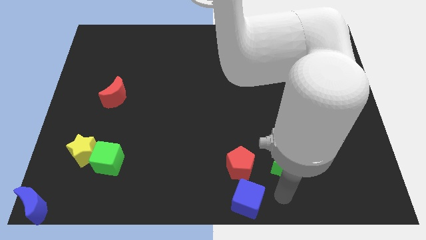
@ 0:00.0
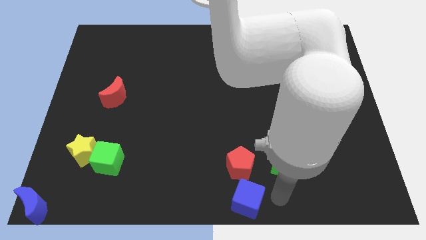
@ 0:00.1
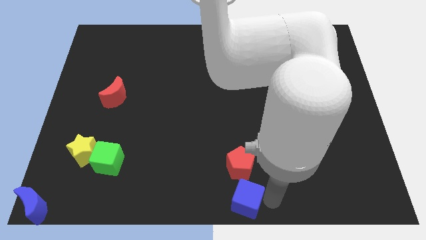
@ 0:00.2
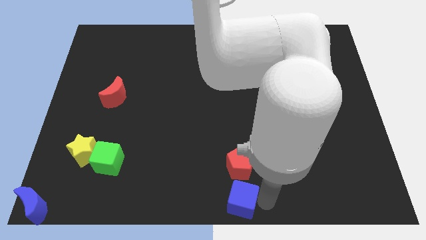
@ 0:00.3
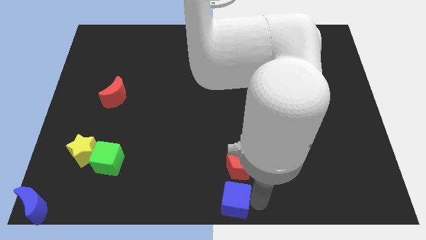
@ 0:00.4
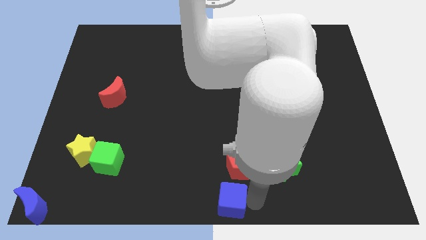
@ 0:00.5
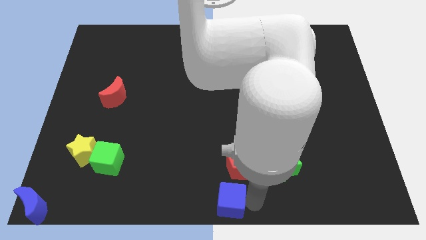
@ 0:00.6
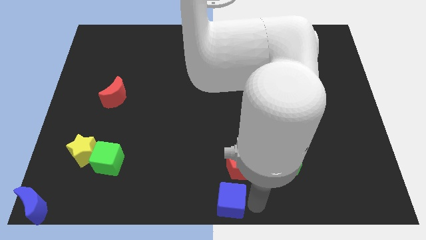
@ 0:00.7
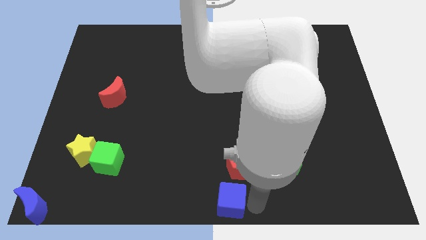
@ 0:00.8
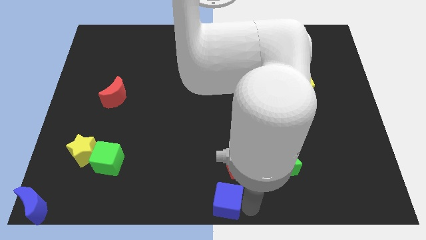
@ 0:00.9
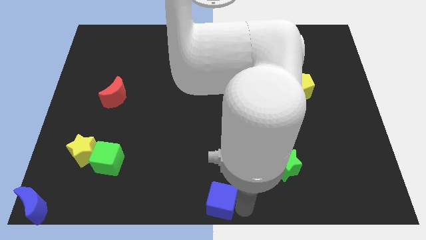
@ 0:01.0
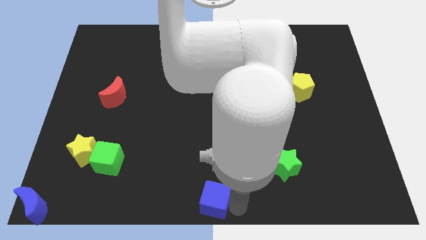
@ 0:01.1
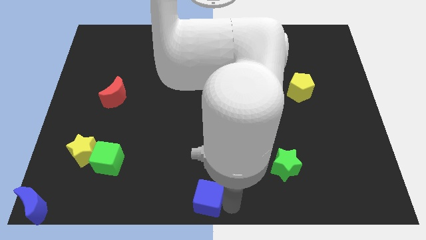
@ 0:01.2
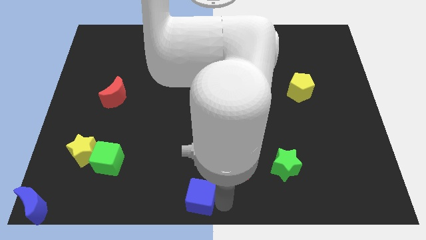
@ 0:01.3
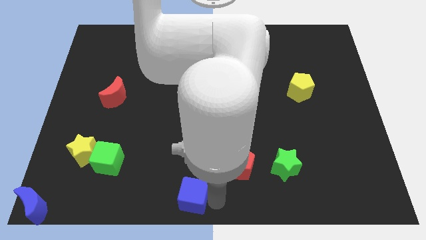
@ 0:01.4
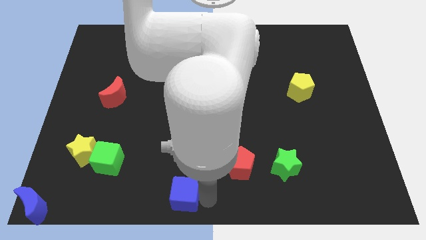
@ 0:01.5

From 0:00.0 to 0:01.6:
place the blue cube at the bottom center of the board

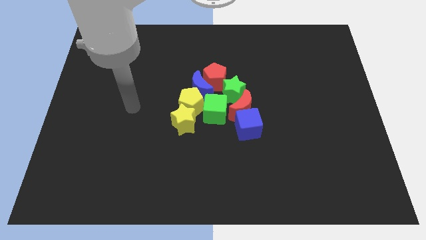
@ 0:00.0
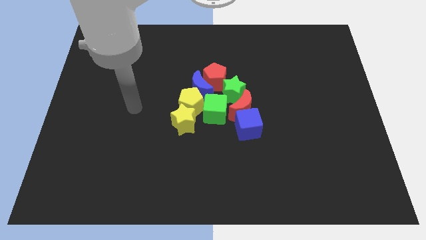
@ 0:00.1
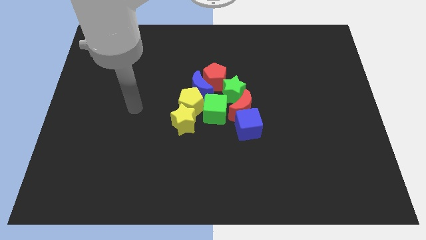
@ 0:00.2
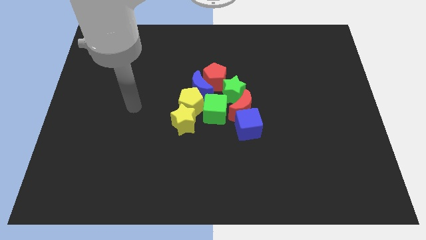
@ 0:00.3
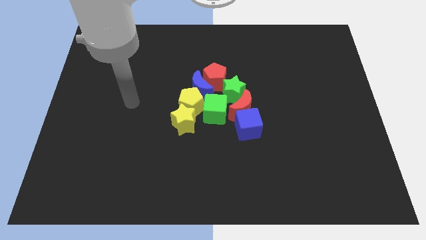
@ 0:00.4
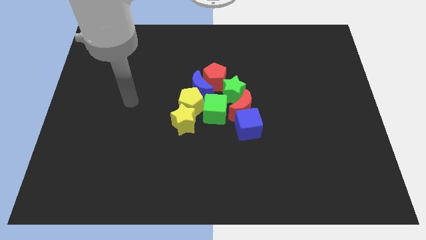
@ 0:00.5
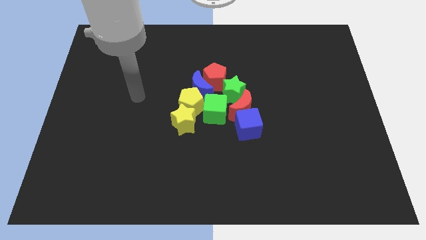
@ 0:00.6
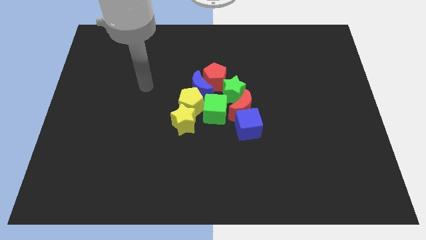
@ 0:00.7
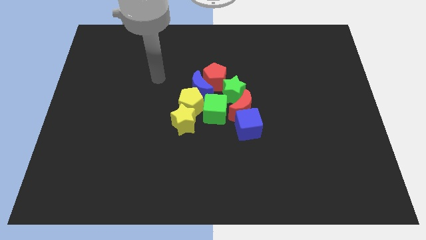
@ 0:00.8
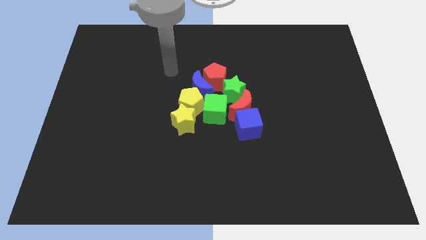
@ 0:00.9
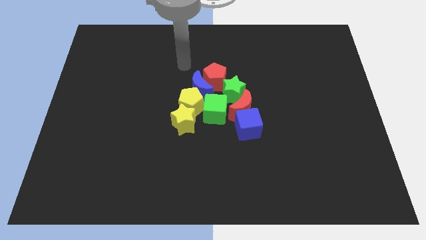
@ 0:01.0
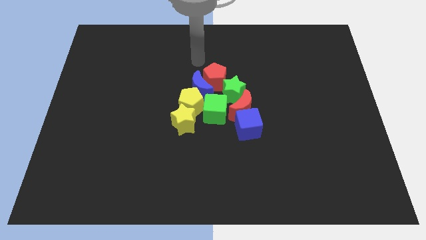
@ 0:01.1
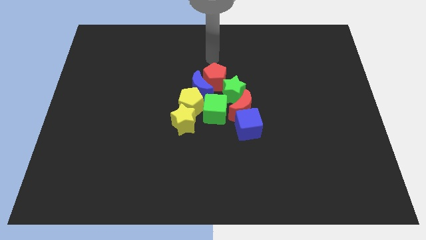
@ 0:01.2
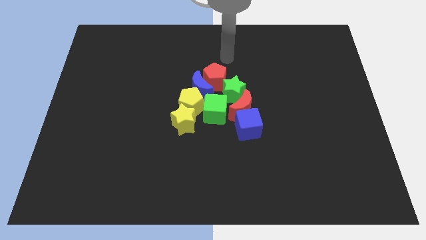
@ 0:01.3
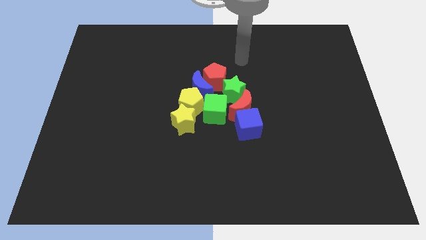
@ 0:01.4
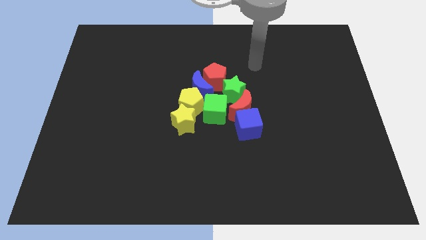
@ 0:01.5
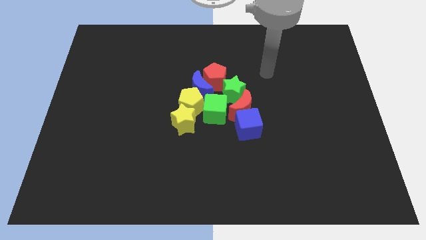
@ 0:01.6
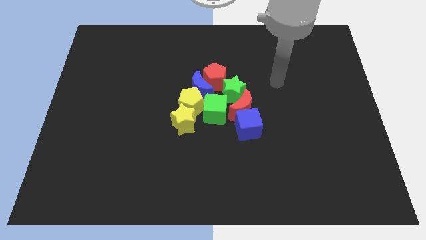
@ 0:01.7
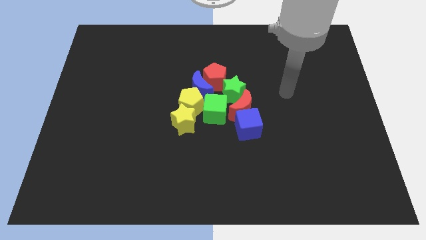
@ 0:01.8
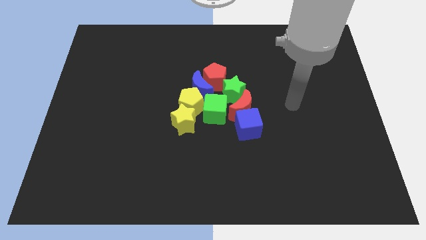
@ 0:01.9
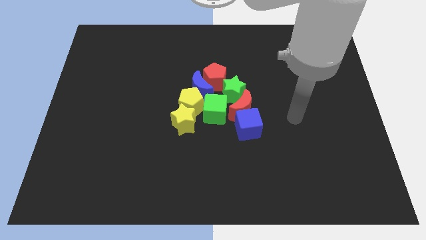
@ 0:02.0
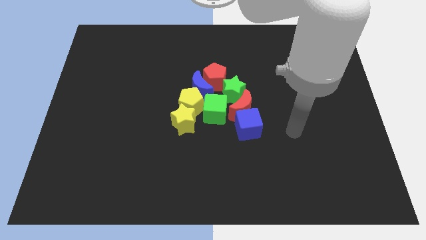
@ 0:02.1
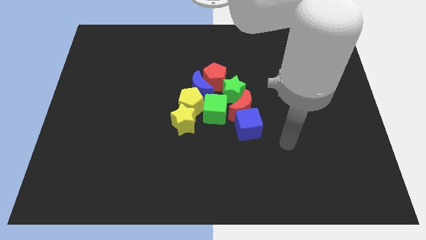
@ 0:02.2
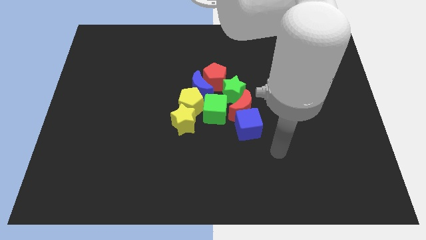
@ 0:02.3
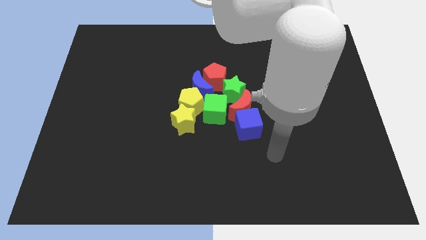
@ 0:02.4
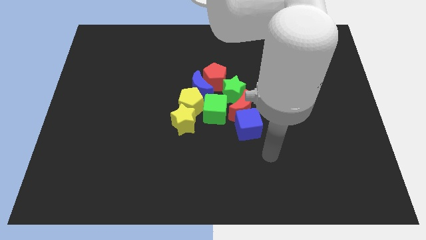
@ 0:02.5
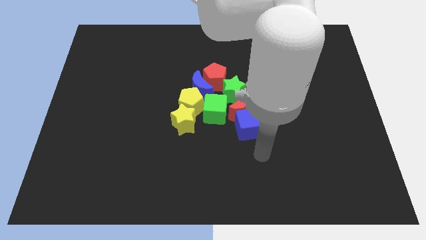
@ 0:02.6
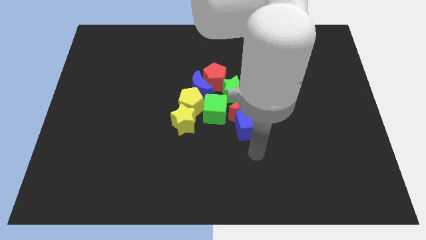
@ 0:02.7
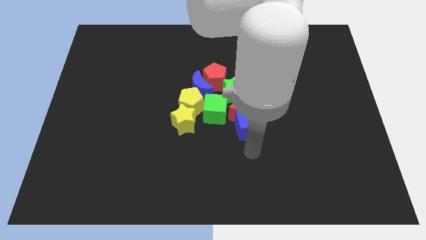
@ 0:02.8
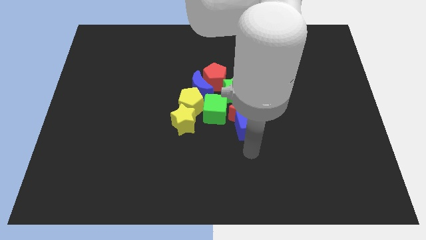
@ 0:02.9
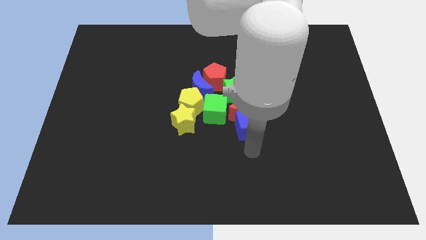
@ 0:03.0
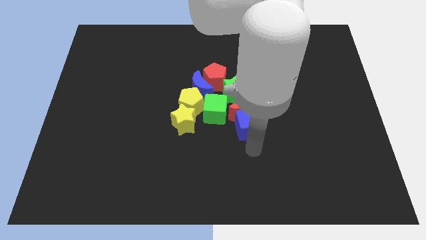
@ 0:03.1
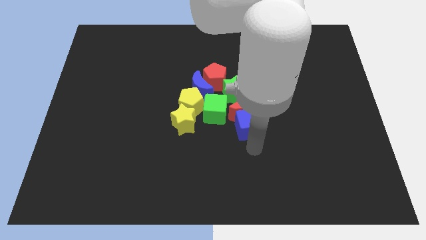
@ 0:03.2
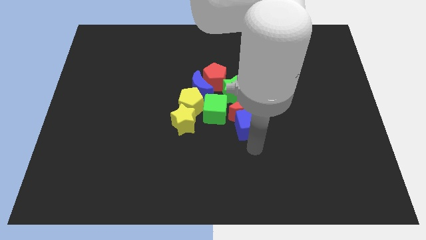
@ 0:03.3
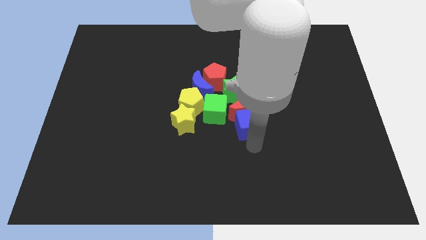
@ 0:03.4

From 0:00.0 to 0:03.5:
place your arm below blue cube

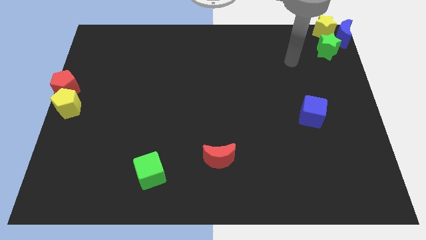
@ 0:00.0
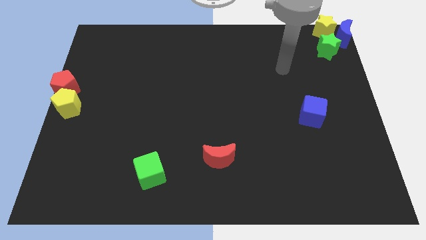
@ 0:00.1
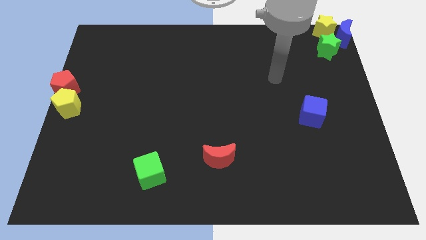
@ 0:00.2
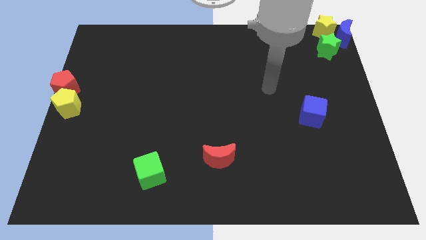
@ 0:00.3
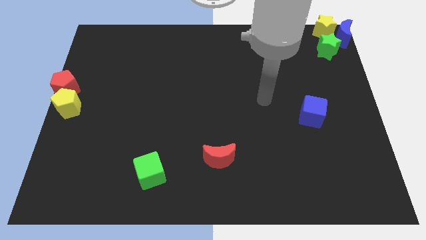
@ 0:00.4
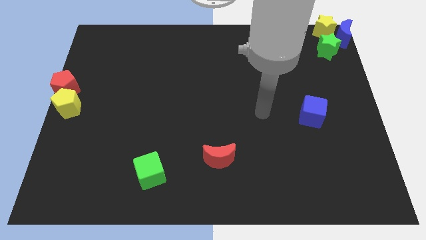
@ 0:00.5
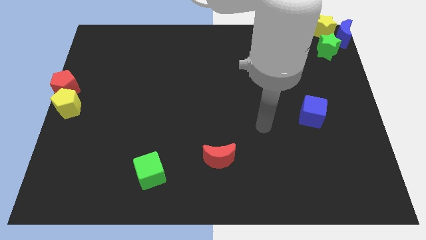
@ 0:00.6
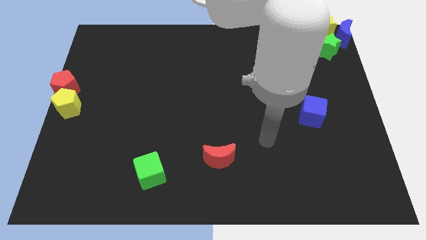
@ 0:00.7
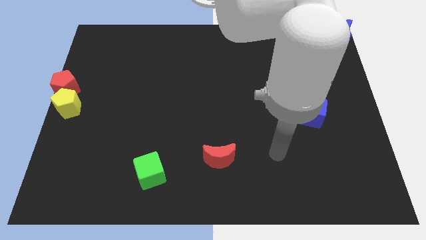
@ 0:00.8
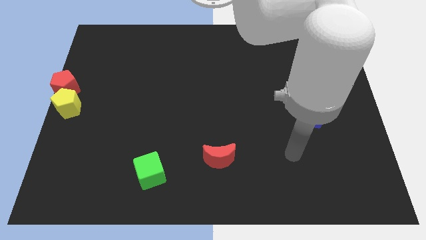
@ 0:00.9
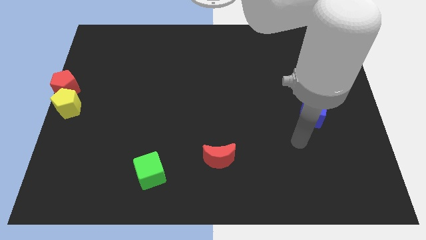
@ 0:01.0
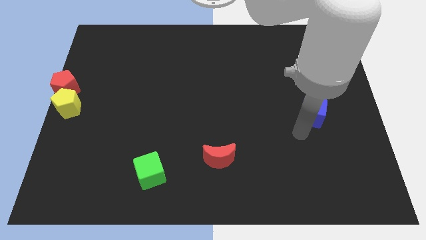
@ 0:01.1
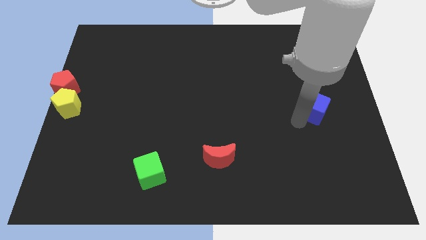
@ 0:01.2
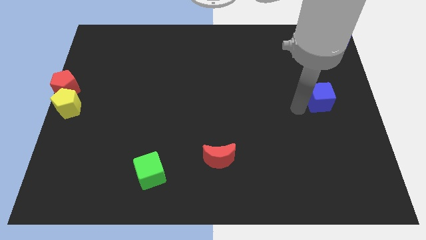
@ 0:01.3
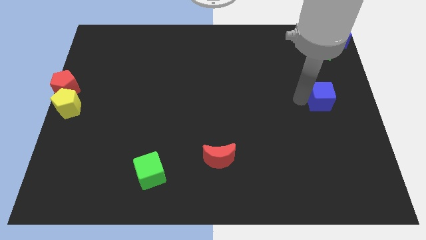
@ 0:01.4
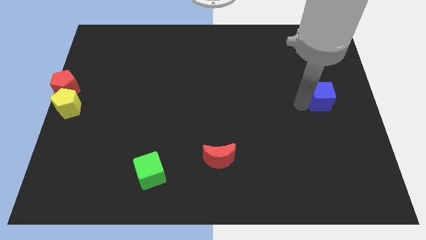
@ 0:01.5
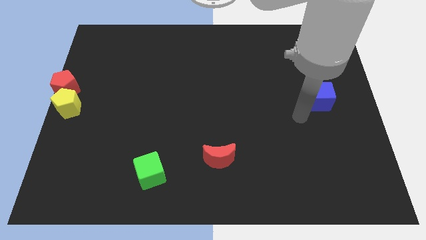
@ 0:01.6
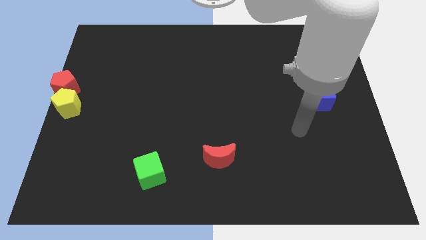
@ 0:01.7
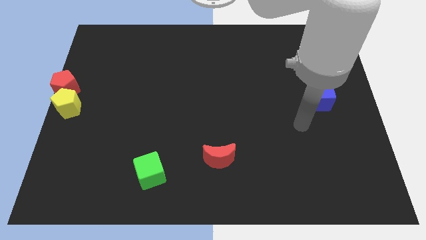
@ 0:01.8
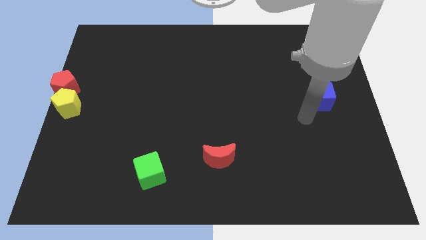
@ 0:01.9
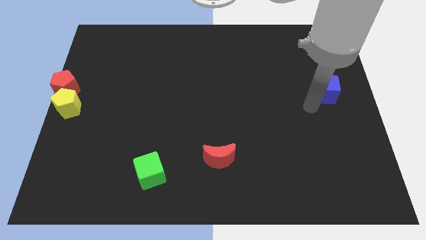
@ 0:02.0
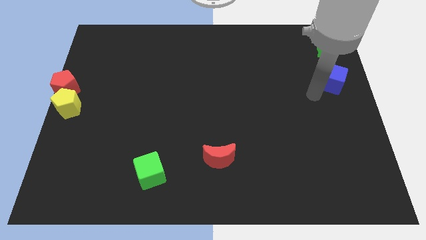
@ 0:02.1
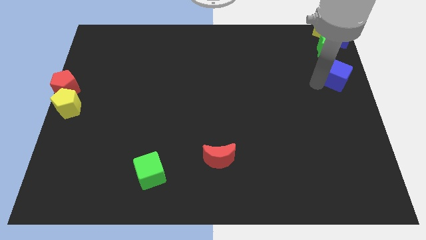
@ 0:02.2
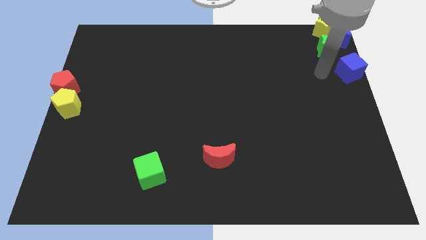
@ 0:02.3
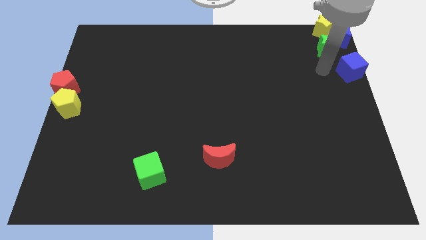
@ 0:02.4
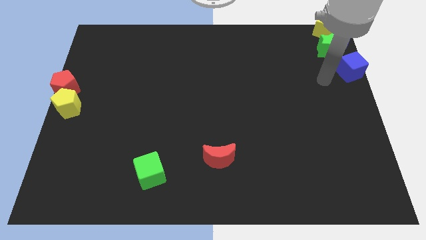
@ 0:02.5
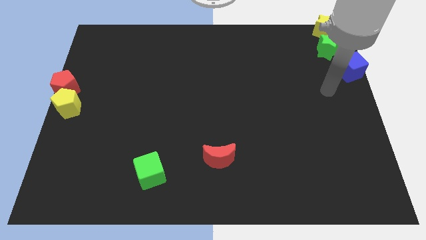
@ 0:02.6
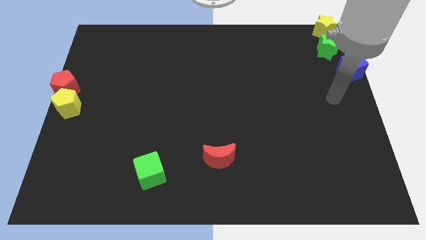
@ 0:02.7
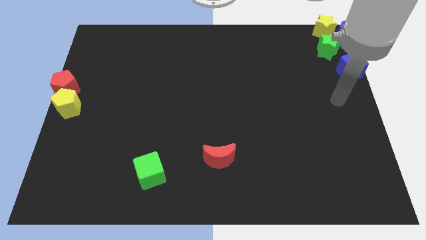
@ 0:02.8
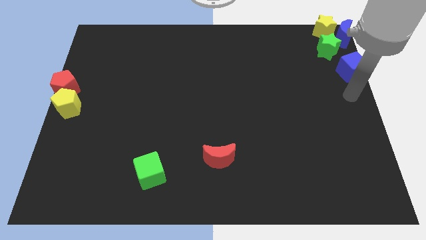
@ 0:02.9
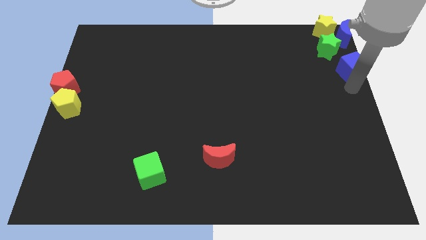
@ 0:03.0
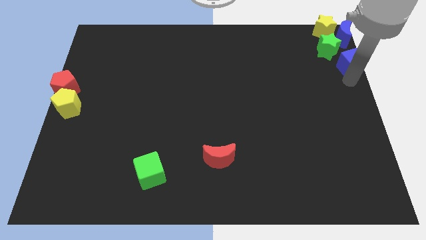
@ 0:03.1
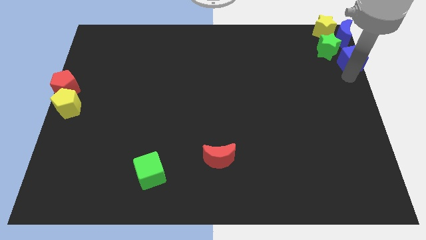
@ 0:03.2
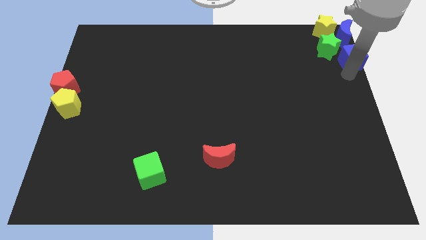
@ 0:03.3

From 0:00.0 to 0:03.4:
move the blue cube underneath the blue crescent

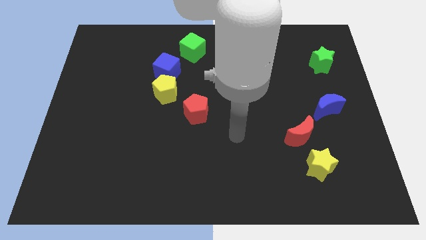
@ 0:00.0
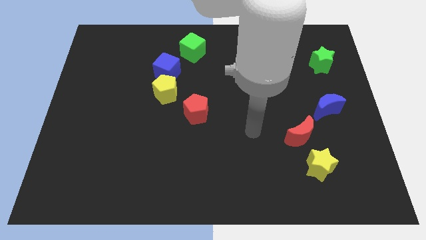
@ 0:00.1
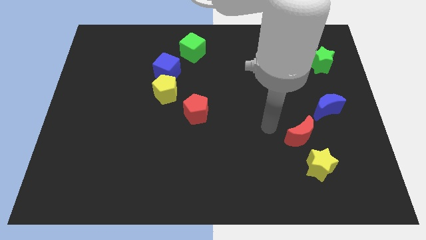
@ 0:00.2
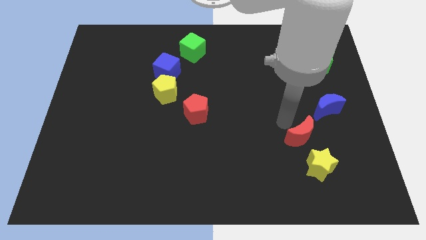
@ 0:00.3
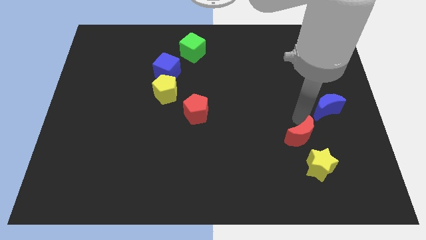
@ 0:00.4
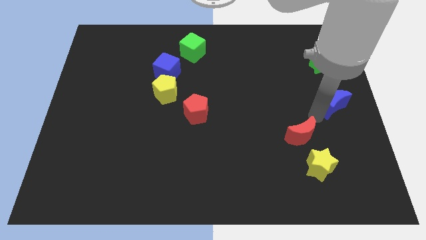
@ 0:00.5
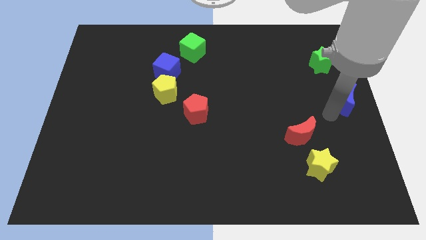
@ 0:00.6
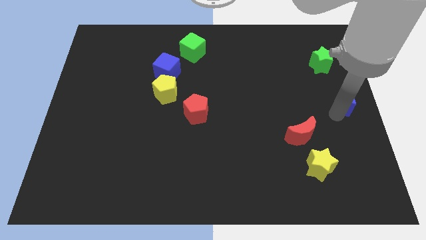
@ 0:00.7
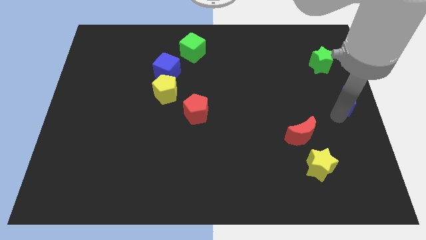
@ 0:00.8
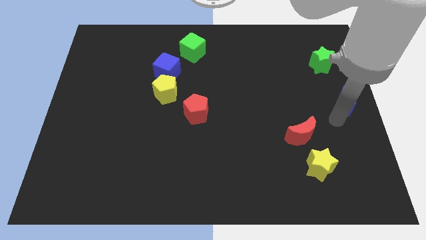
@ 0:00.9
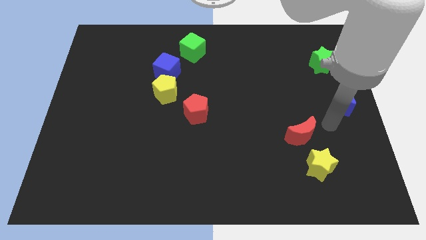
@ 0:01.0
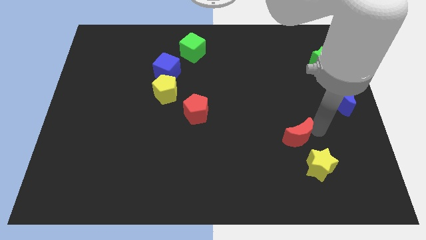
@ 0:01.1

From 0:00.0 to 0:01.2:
separate blue moon from the red moon
